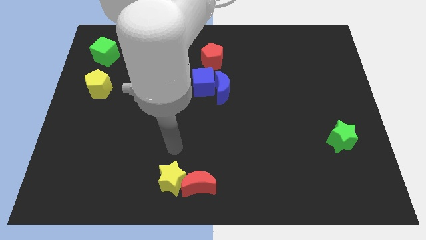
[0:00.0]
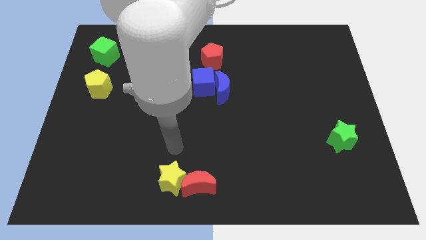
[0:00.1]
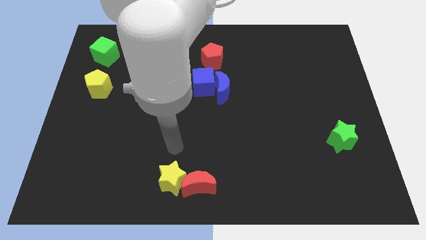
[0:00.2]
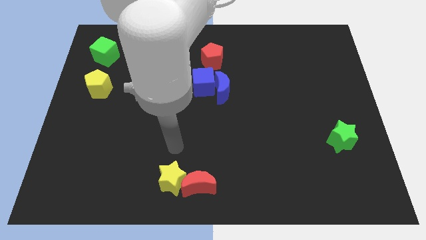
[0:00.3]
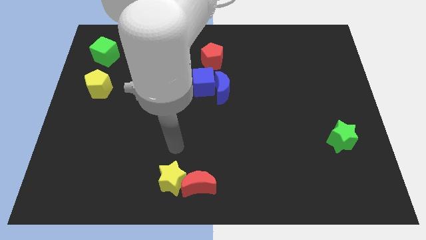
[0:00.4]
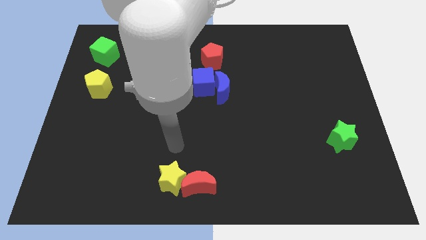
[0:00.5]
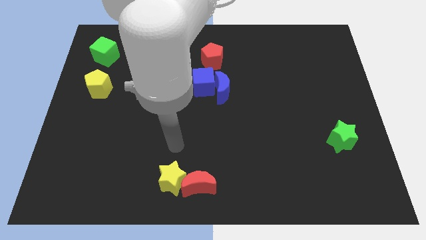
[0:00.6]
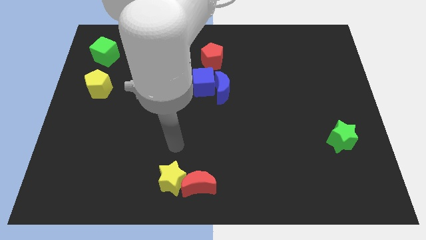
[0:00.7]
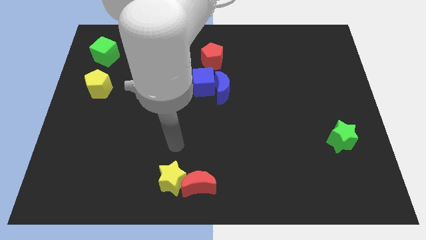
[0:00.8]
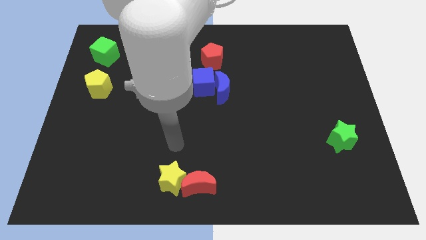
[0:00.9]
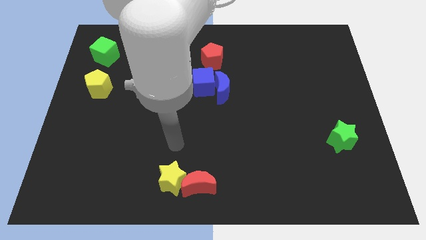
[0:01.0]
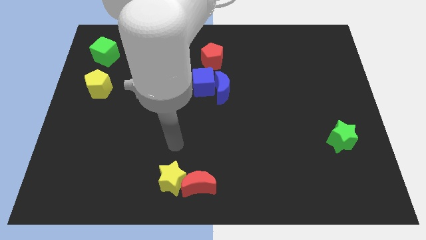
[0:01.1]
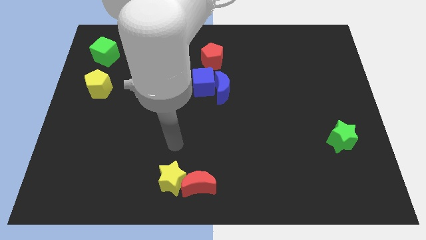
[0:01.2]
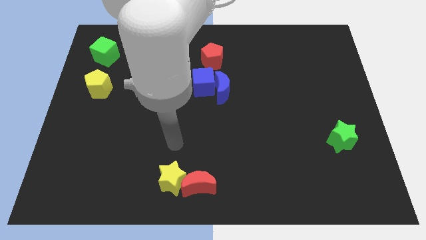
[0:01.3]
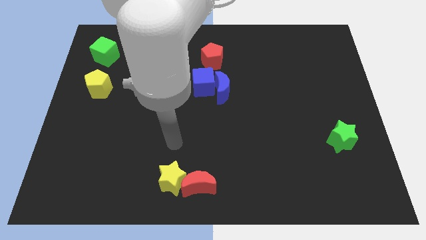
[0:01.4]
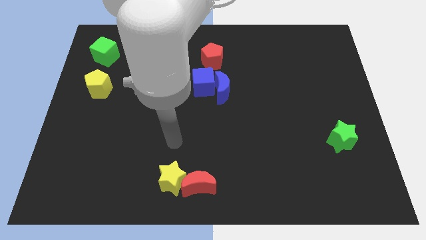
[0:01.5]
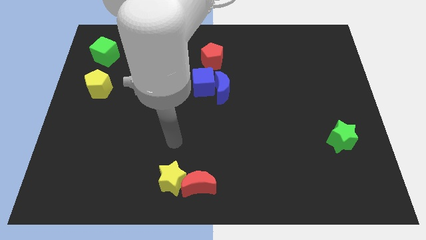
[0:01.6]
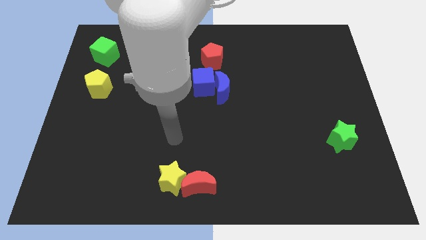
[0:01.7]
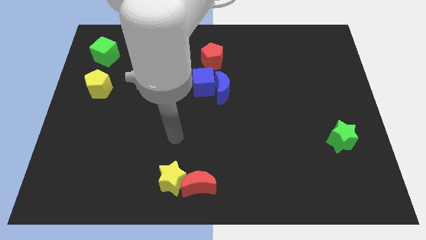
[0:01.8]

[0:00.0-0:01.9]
move your arm slightly away from the yellow star

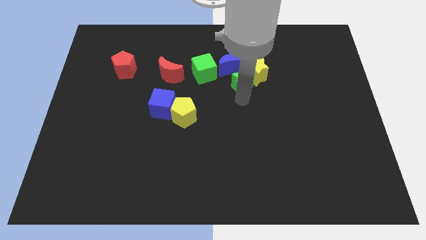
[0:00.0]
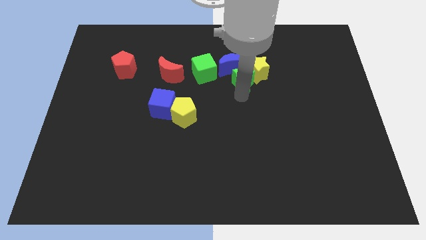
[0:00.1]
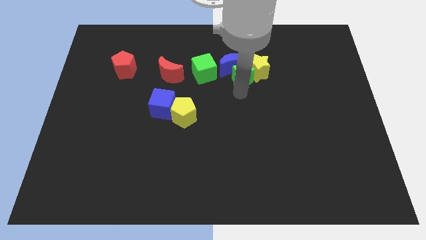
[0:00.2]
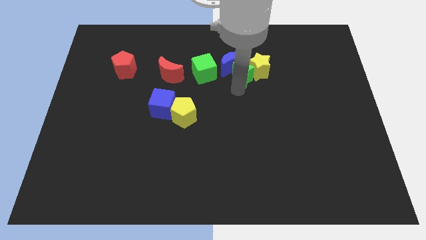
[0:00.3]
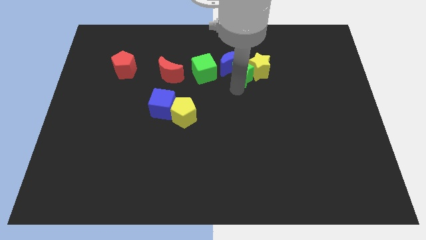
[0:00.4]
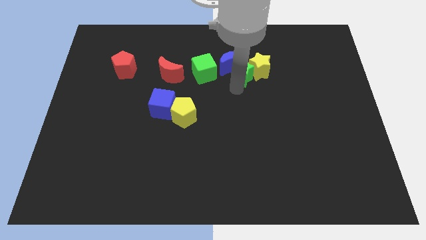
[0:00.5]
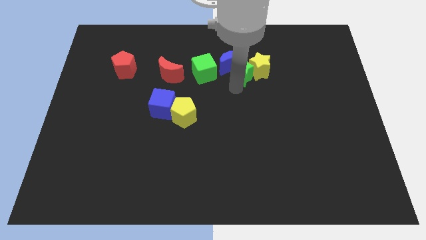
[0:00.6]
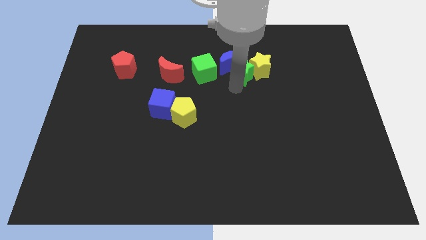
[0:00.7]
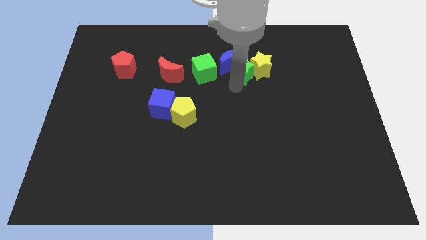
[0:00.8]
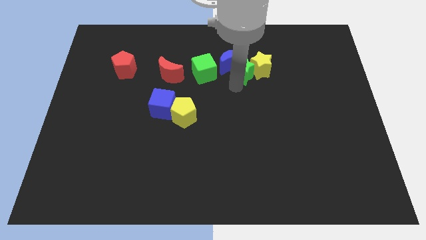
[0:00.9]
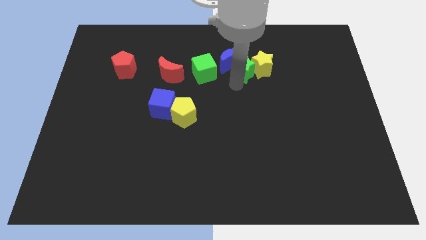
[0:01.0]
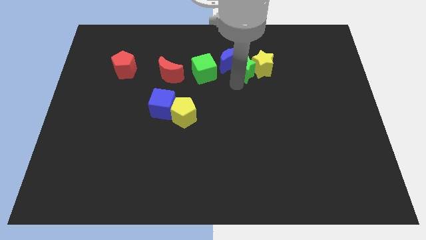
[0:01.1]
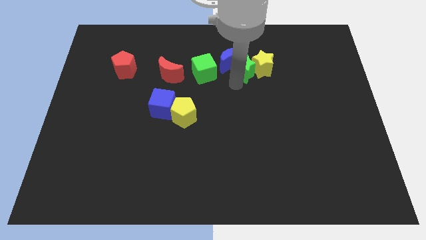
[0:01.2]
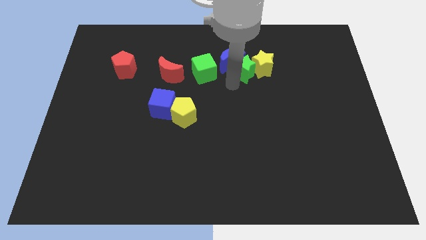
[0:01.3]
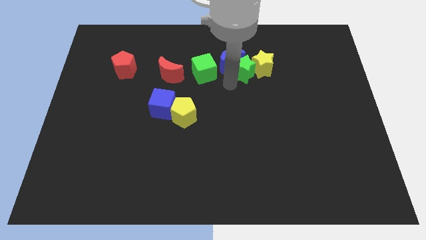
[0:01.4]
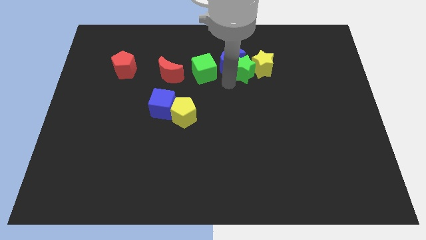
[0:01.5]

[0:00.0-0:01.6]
push the green star into the blue moon

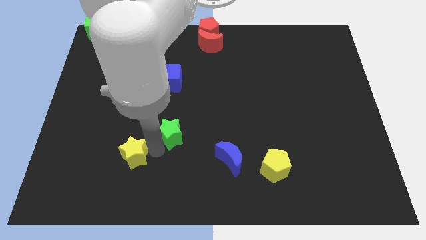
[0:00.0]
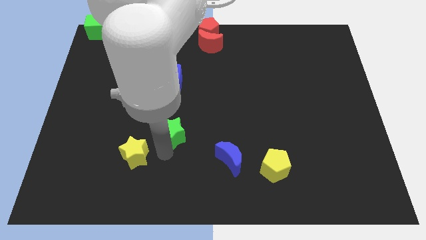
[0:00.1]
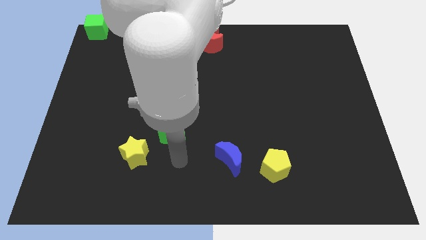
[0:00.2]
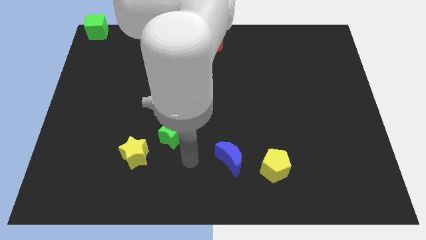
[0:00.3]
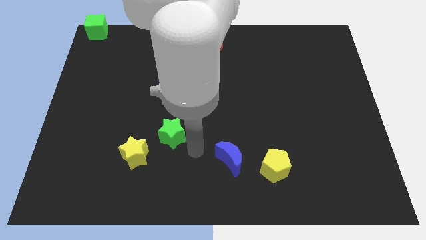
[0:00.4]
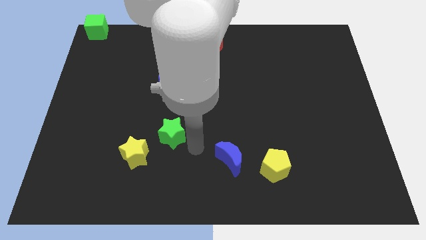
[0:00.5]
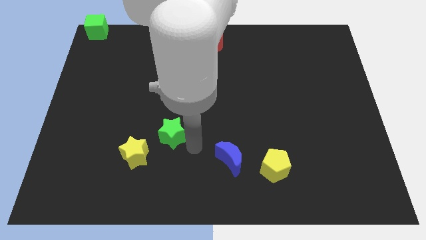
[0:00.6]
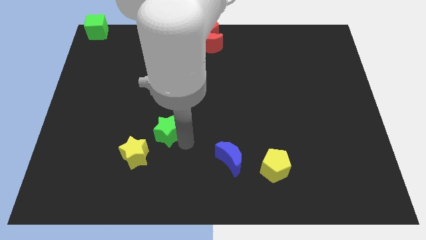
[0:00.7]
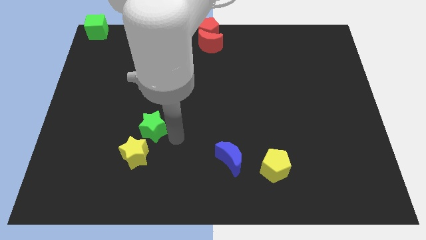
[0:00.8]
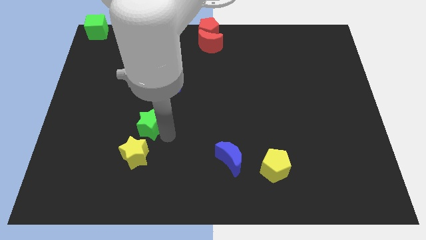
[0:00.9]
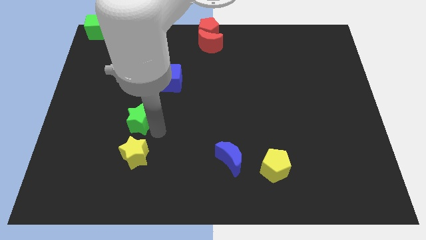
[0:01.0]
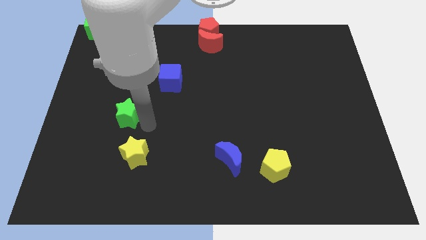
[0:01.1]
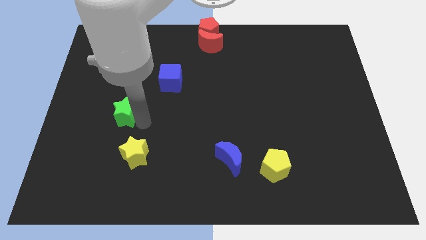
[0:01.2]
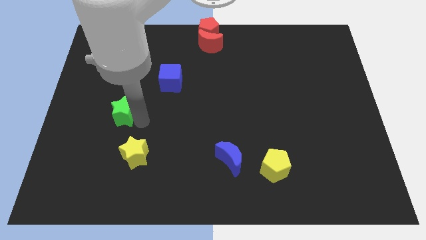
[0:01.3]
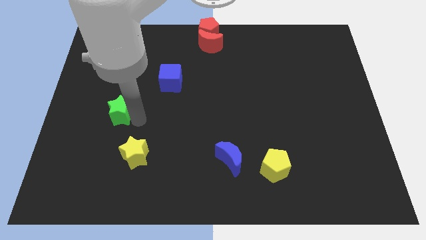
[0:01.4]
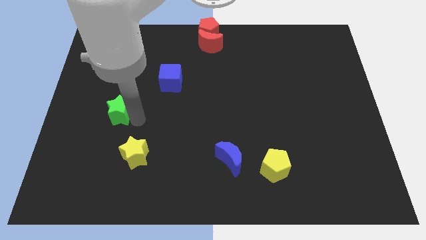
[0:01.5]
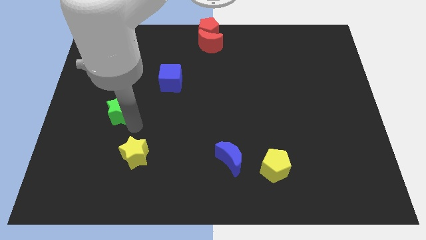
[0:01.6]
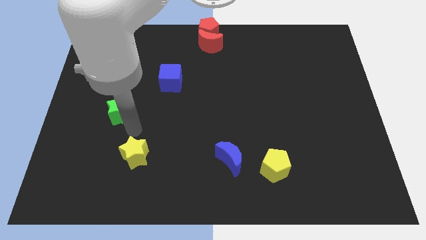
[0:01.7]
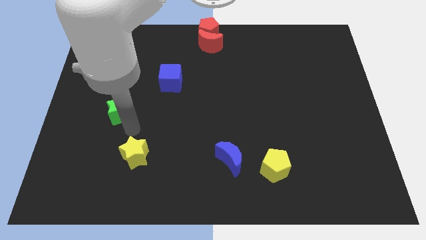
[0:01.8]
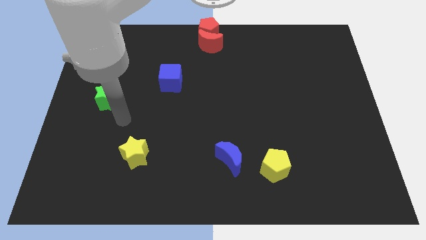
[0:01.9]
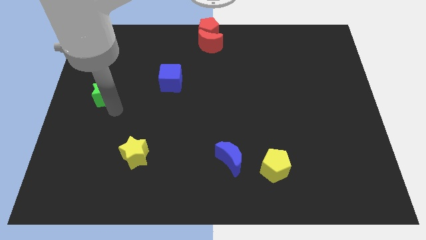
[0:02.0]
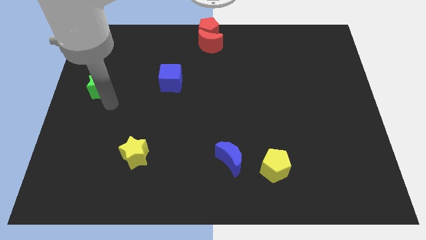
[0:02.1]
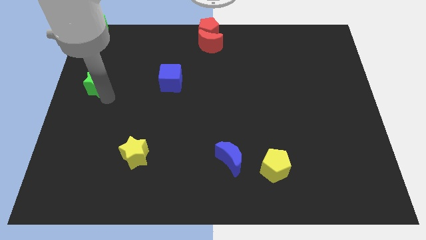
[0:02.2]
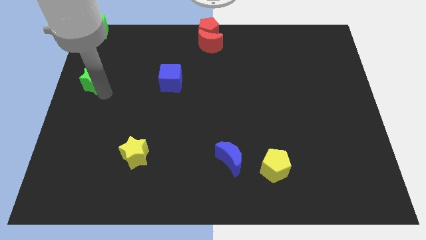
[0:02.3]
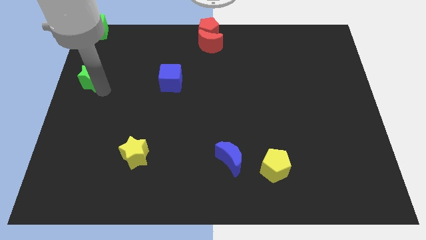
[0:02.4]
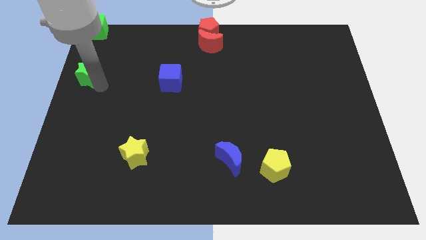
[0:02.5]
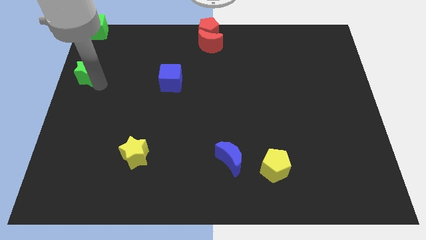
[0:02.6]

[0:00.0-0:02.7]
put the green star to the horizontal left of the blue cube

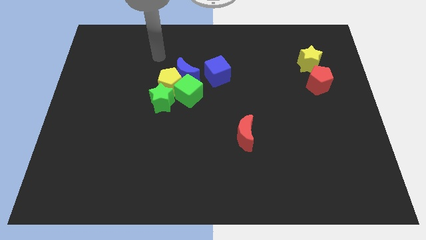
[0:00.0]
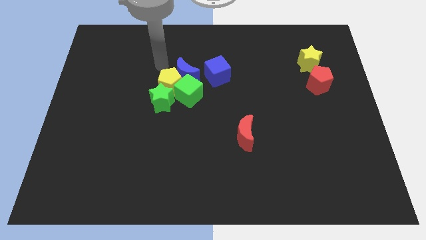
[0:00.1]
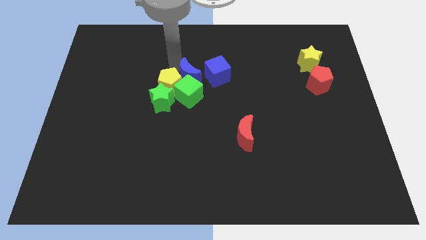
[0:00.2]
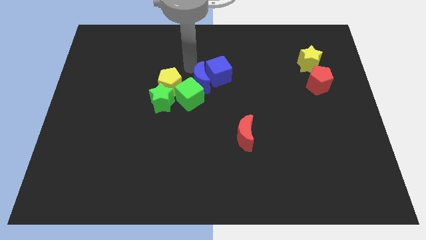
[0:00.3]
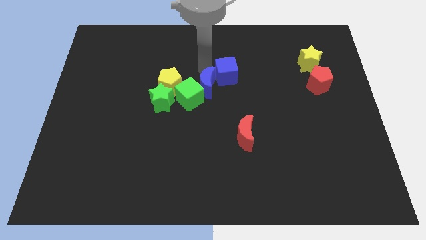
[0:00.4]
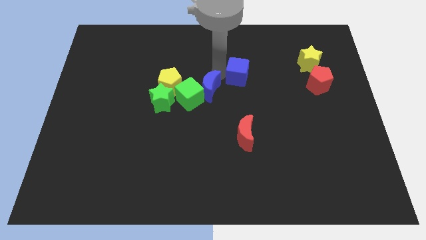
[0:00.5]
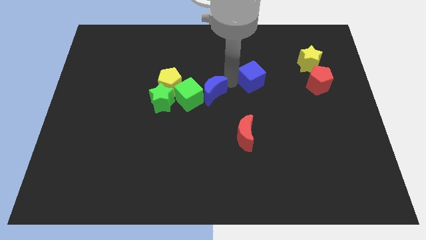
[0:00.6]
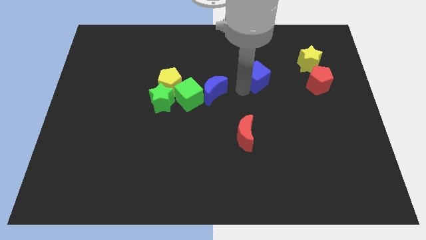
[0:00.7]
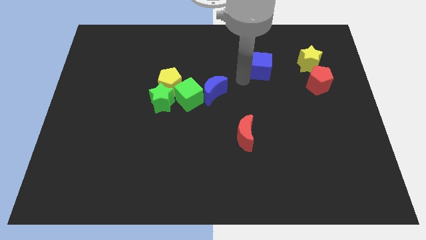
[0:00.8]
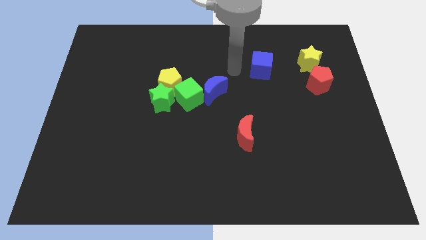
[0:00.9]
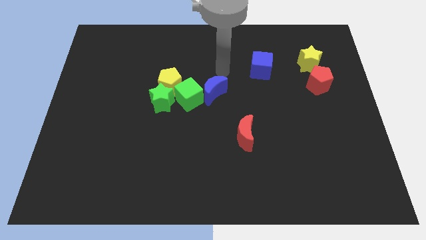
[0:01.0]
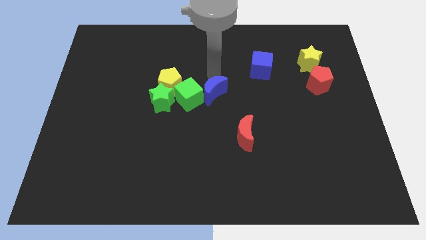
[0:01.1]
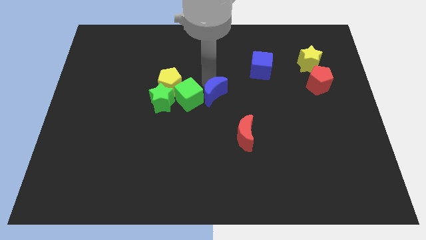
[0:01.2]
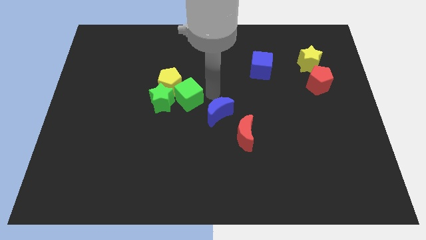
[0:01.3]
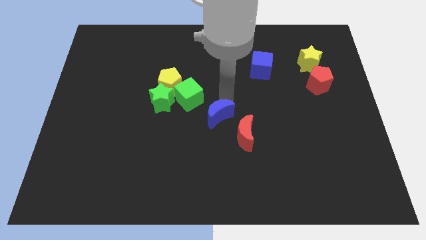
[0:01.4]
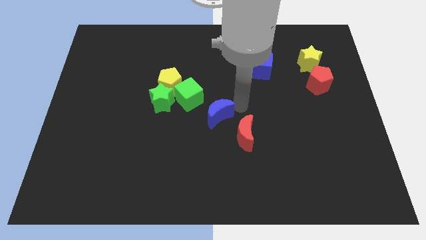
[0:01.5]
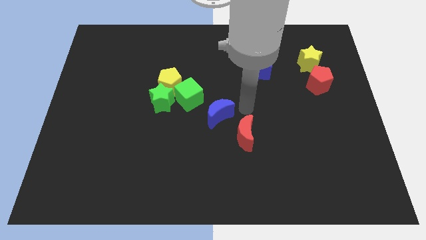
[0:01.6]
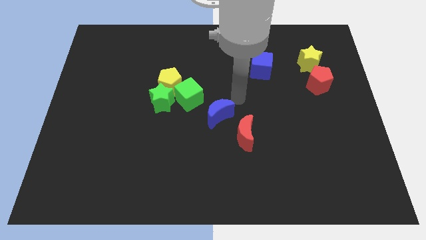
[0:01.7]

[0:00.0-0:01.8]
place the blue crescent in between the red crescent and green cube

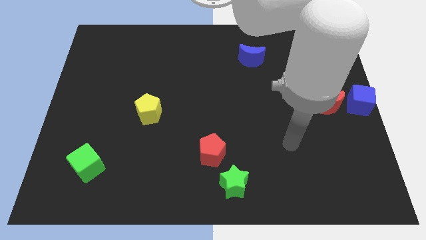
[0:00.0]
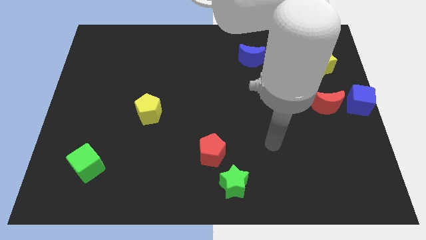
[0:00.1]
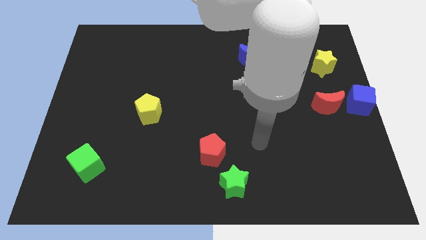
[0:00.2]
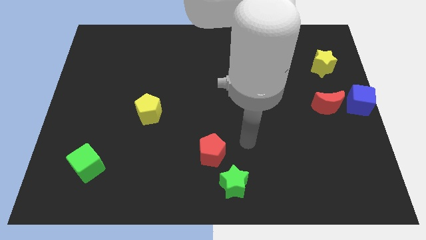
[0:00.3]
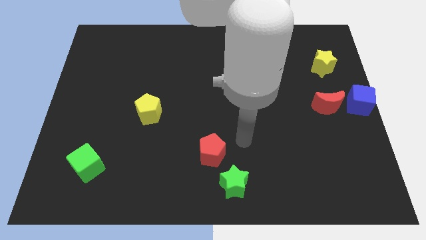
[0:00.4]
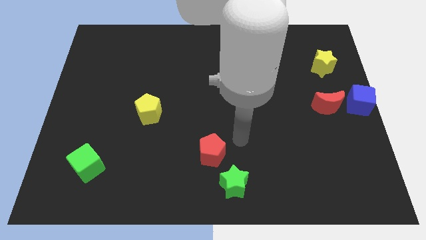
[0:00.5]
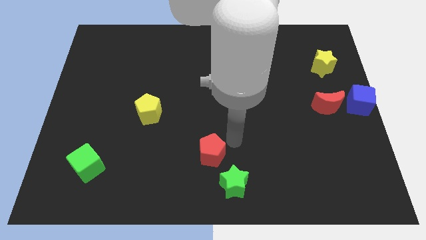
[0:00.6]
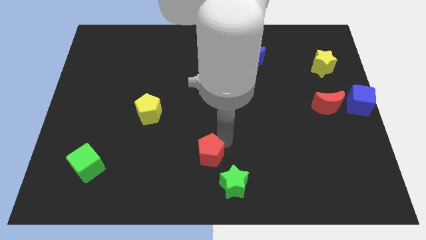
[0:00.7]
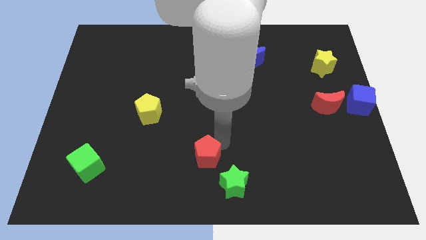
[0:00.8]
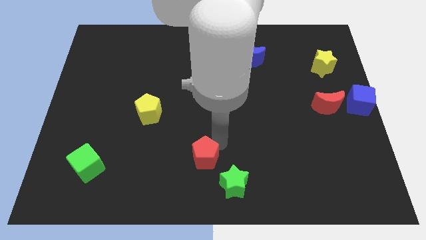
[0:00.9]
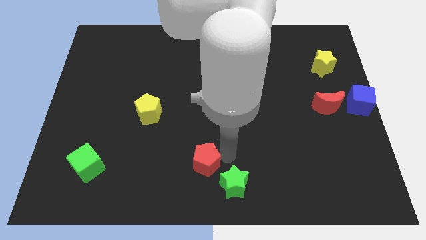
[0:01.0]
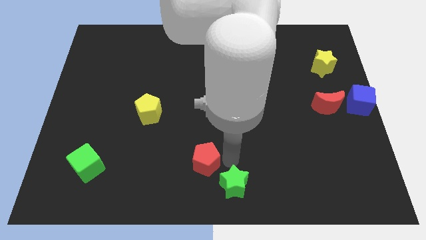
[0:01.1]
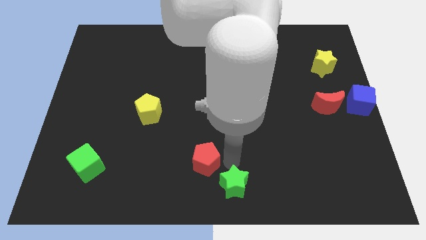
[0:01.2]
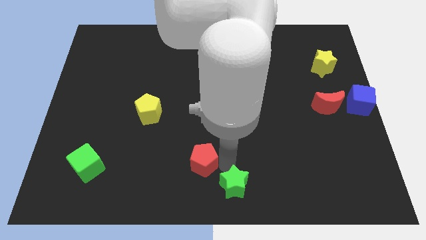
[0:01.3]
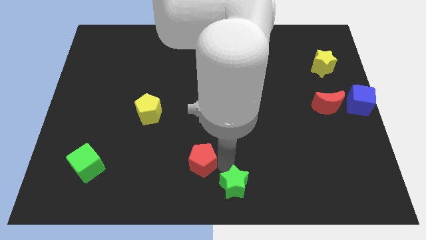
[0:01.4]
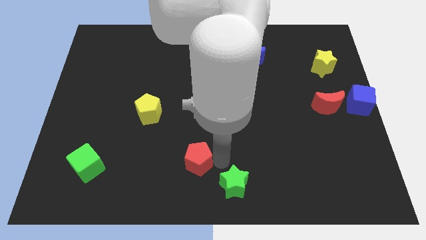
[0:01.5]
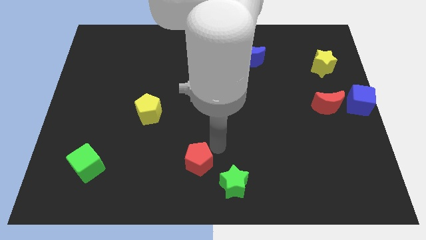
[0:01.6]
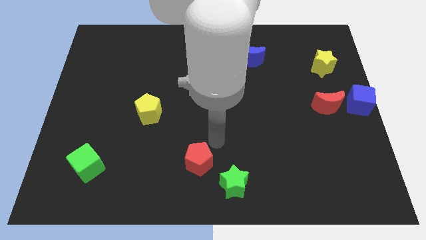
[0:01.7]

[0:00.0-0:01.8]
push the red pentagon between yellow pentagon and green star
